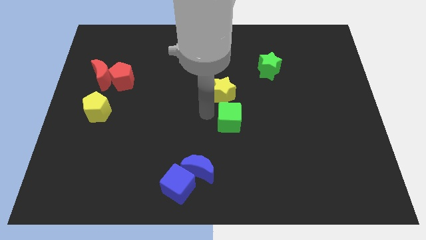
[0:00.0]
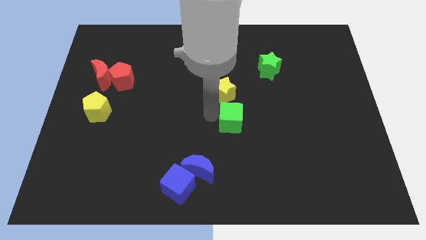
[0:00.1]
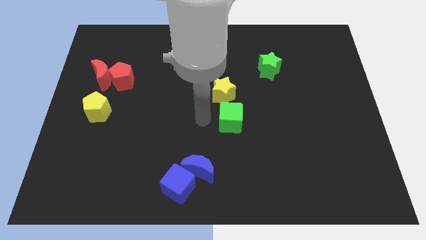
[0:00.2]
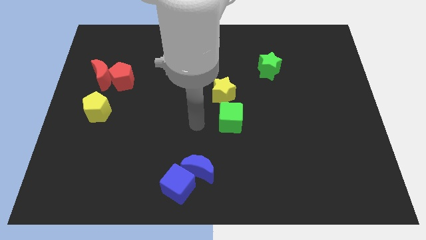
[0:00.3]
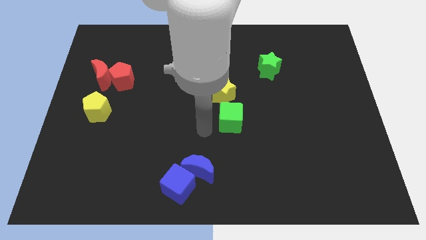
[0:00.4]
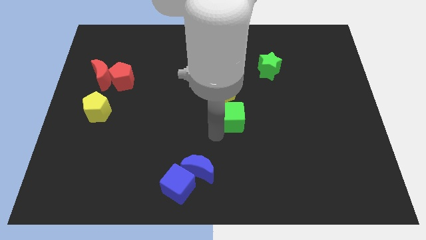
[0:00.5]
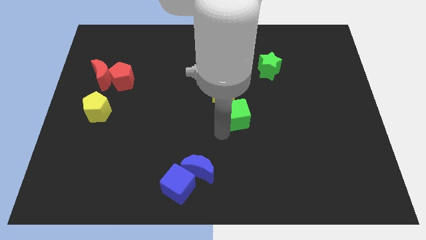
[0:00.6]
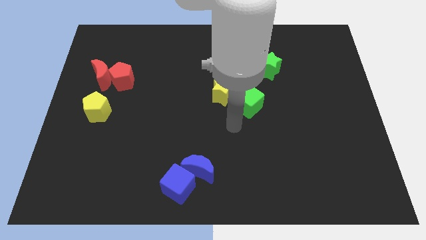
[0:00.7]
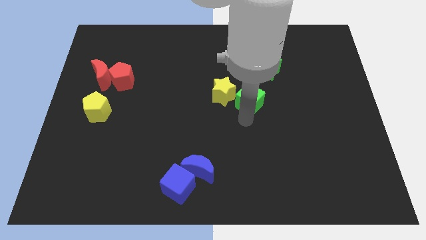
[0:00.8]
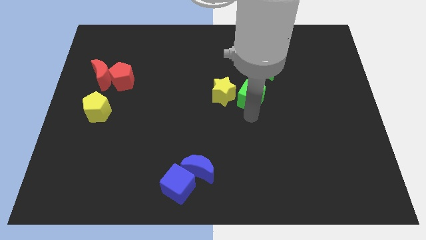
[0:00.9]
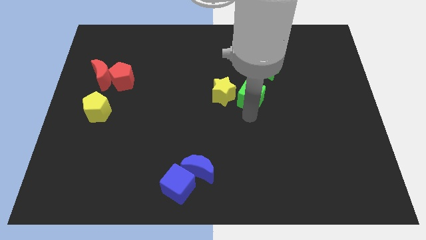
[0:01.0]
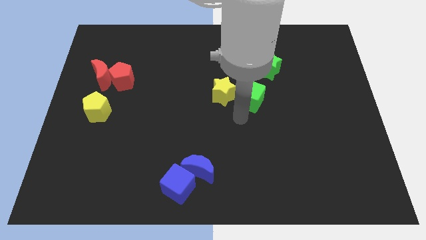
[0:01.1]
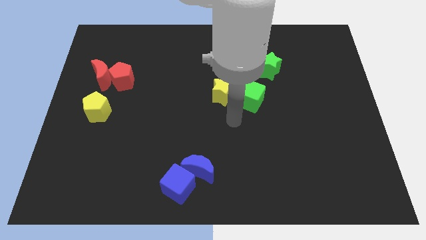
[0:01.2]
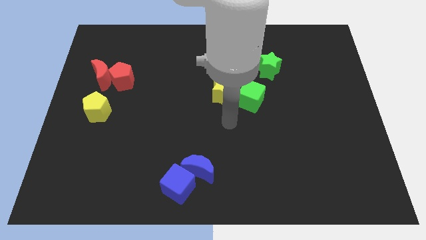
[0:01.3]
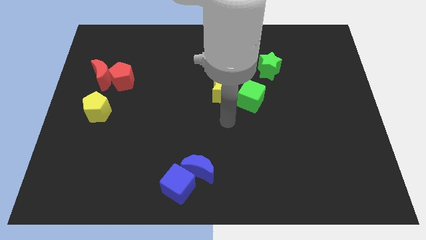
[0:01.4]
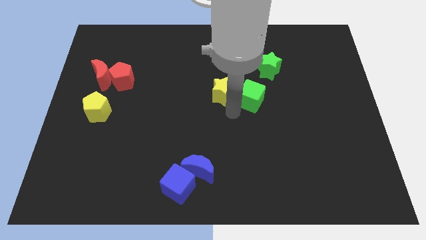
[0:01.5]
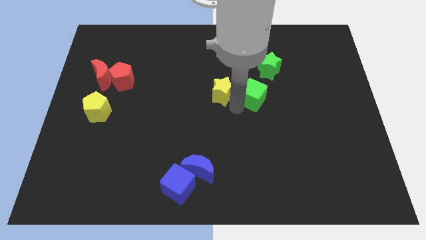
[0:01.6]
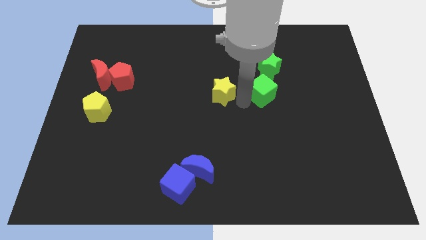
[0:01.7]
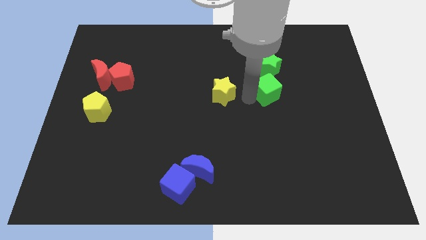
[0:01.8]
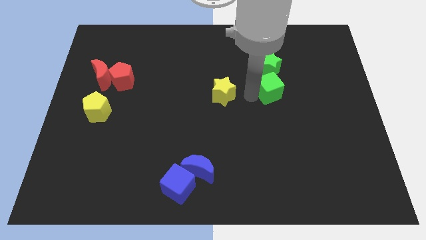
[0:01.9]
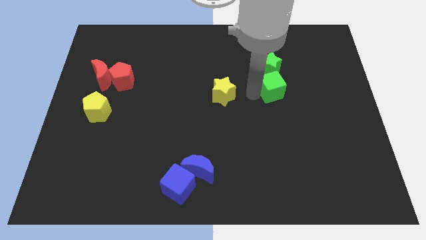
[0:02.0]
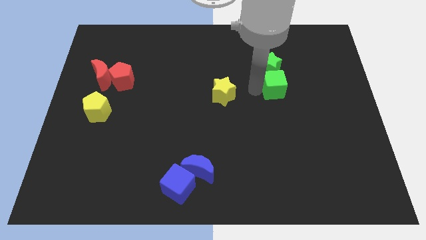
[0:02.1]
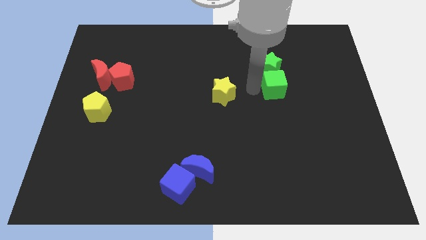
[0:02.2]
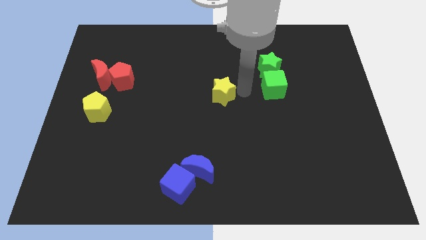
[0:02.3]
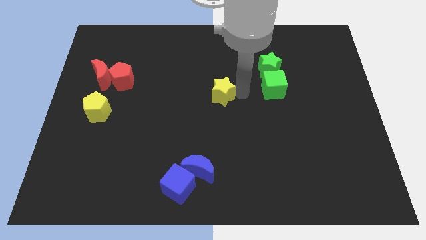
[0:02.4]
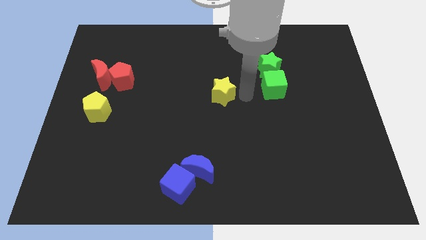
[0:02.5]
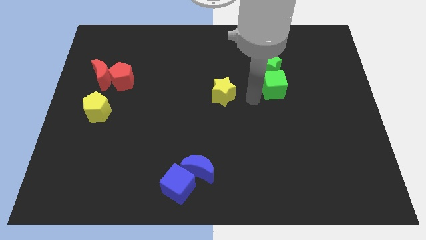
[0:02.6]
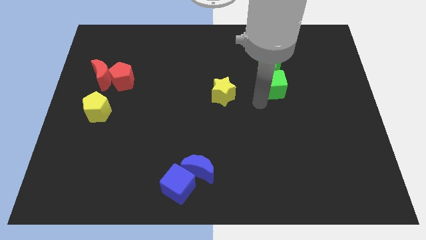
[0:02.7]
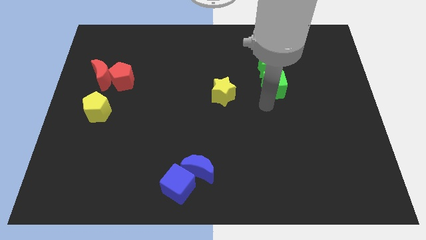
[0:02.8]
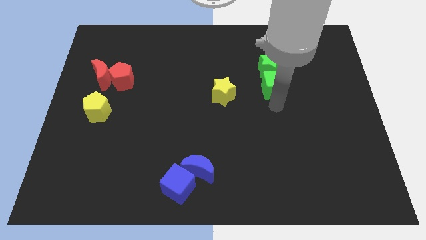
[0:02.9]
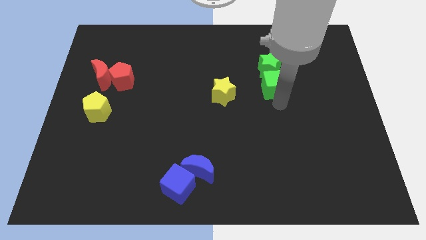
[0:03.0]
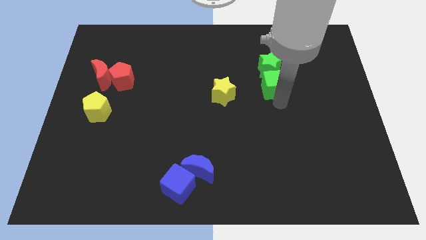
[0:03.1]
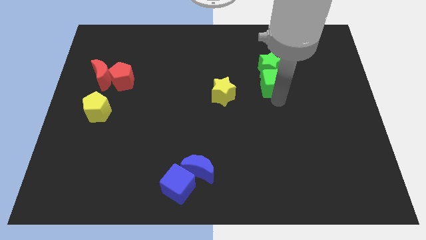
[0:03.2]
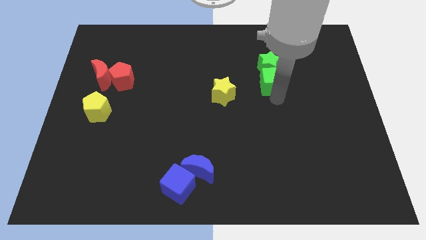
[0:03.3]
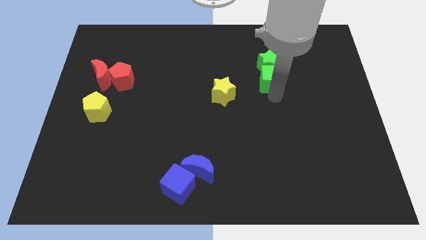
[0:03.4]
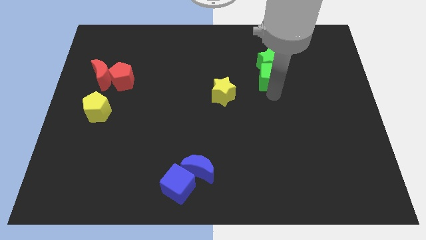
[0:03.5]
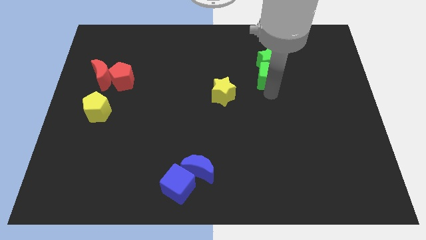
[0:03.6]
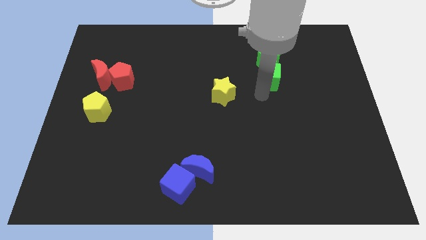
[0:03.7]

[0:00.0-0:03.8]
push the green cube into the green star

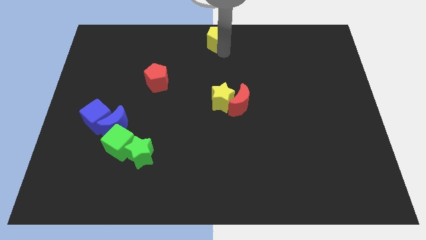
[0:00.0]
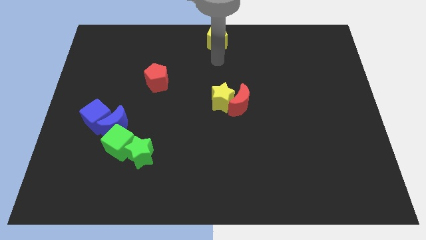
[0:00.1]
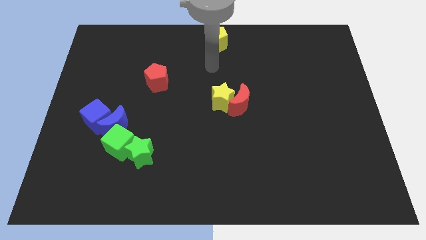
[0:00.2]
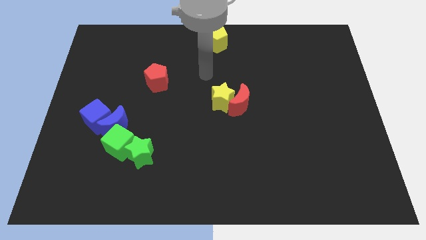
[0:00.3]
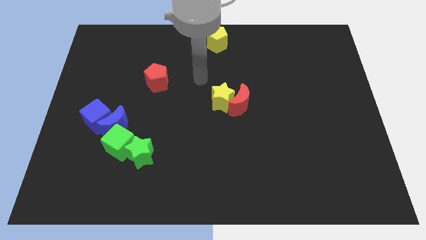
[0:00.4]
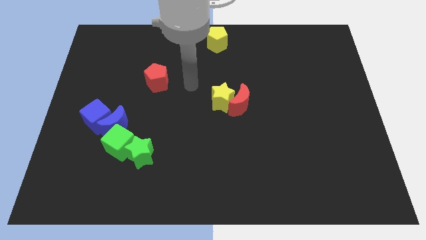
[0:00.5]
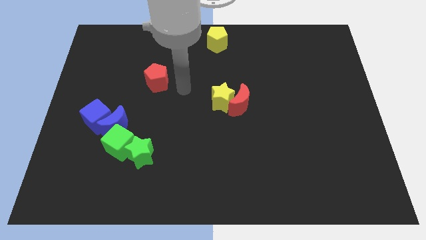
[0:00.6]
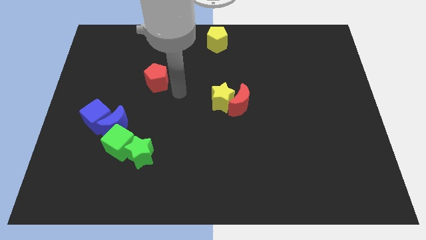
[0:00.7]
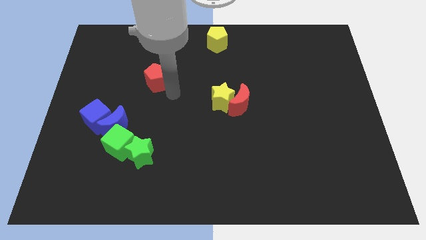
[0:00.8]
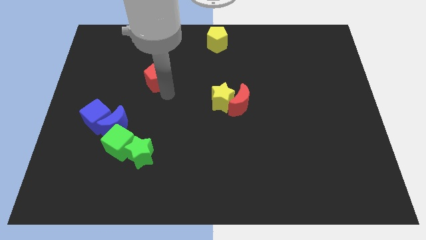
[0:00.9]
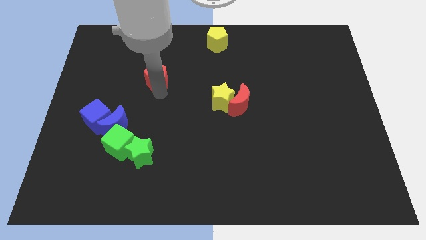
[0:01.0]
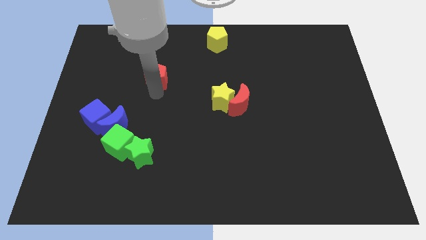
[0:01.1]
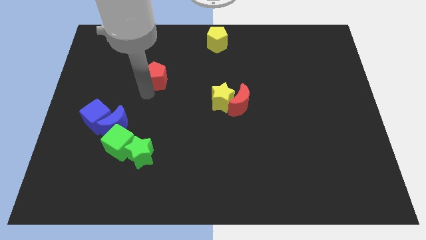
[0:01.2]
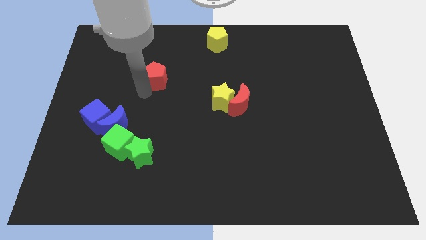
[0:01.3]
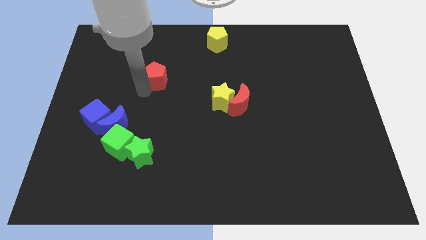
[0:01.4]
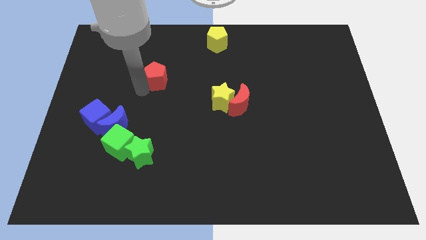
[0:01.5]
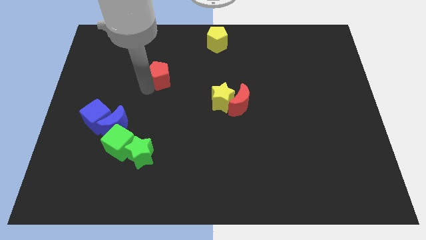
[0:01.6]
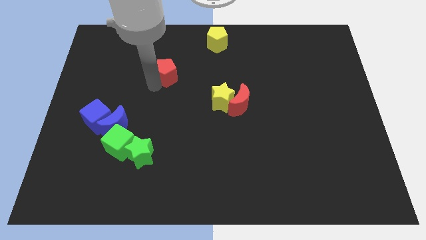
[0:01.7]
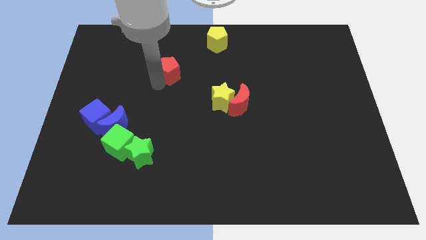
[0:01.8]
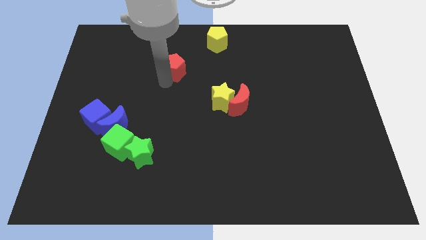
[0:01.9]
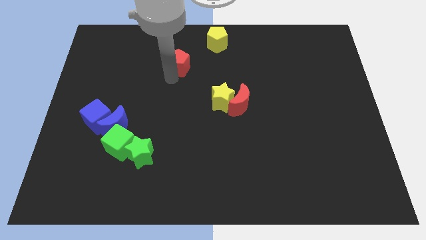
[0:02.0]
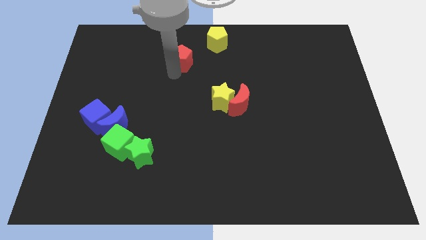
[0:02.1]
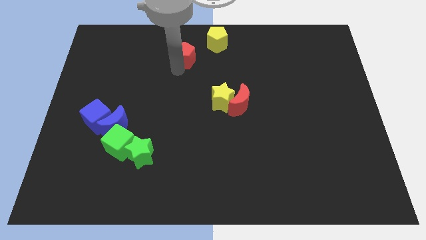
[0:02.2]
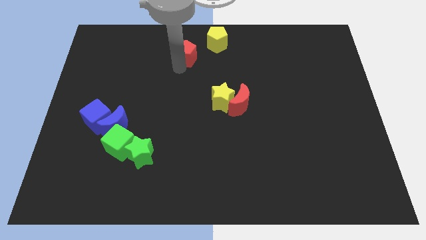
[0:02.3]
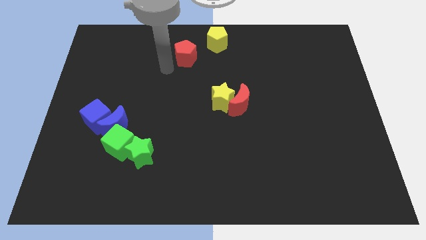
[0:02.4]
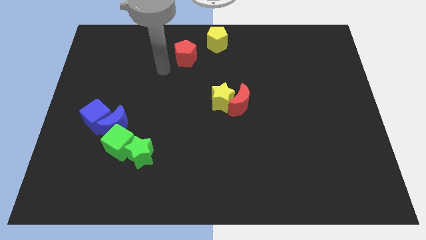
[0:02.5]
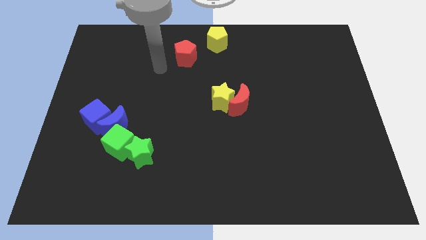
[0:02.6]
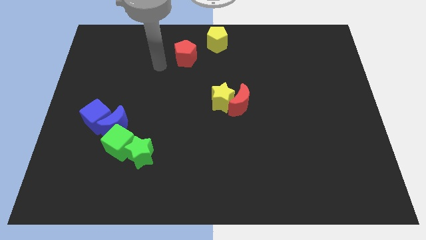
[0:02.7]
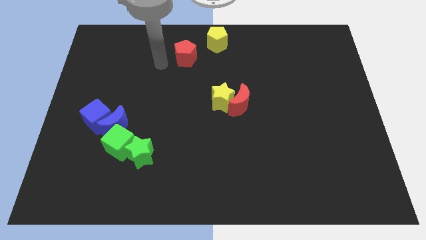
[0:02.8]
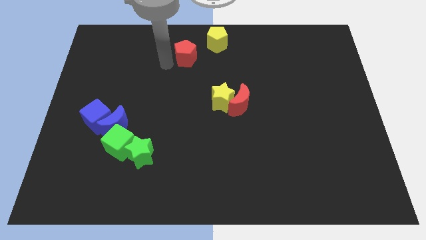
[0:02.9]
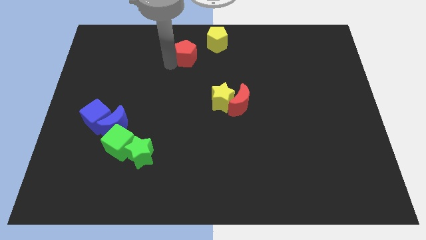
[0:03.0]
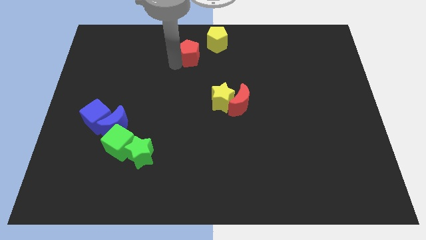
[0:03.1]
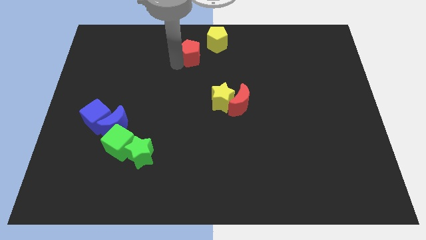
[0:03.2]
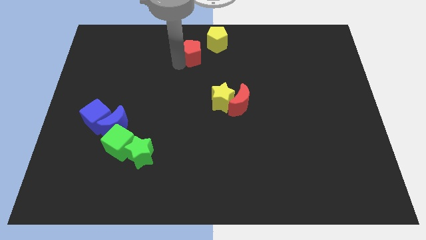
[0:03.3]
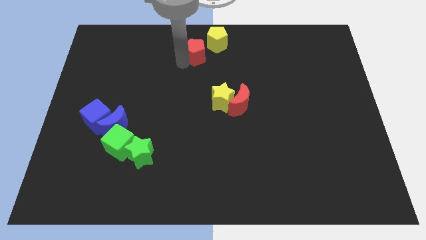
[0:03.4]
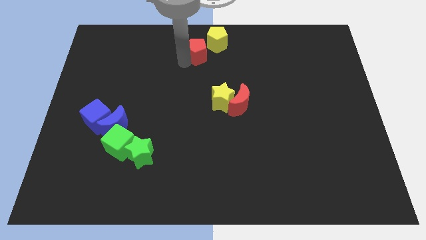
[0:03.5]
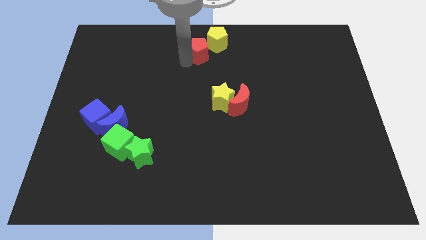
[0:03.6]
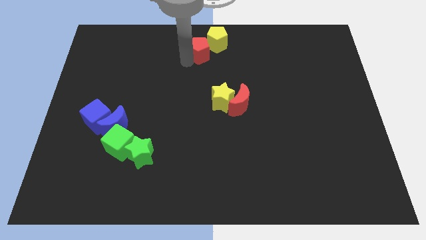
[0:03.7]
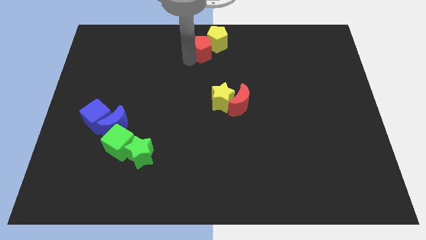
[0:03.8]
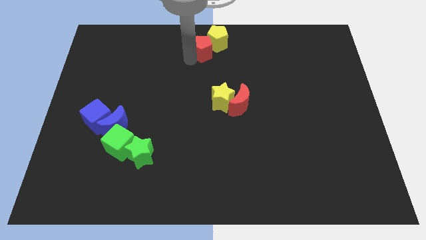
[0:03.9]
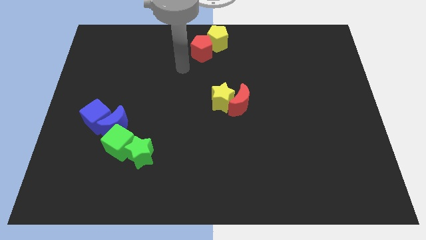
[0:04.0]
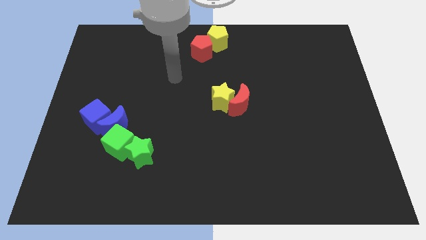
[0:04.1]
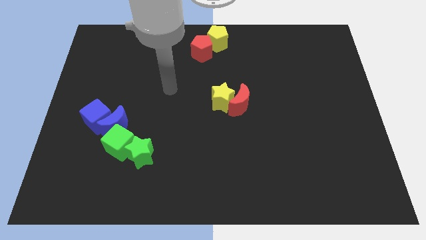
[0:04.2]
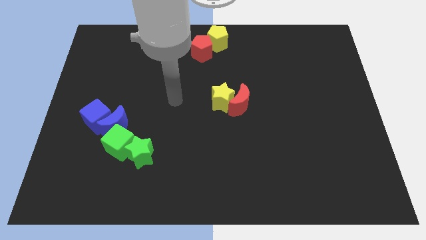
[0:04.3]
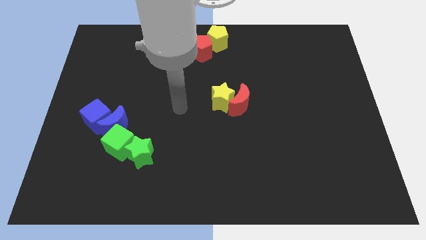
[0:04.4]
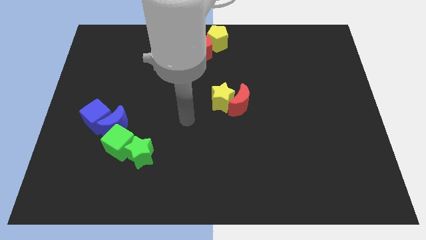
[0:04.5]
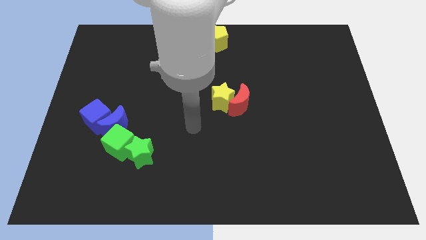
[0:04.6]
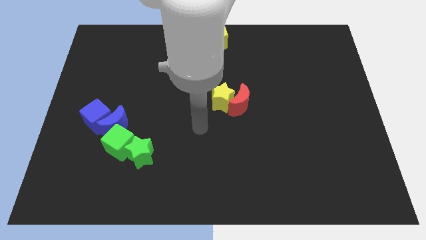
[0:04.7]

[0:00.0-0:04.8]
push the red pentagon near the yellow pentagon

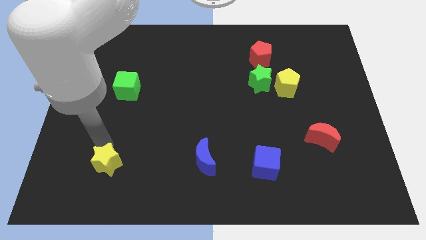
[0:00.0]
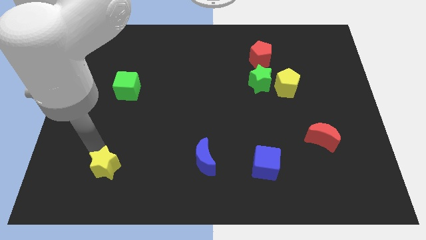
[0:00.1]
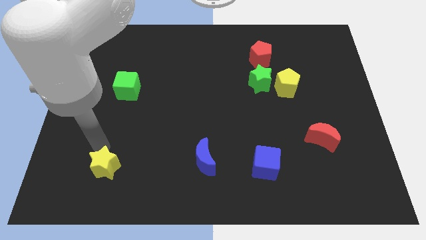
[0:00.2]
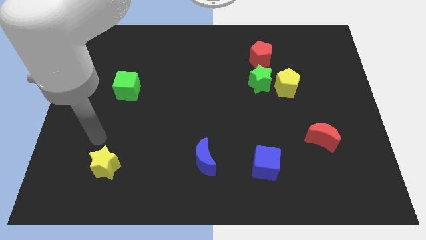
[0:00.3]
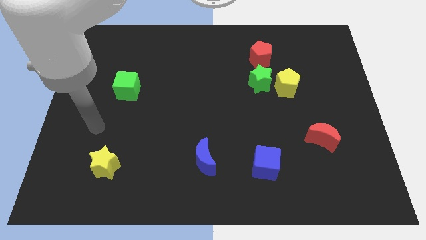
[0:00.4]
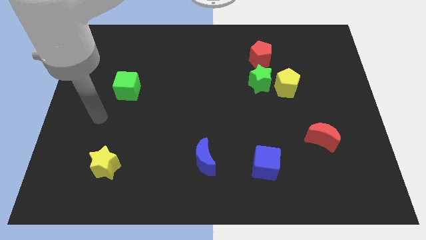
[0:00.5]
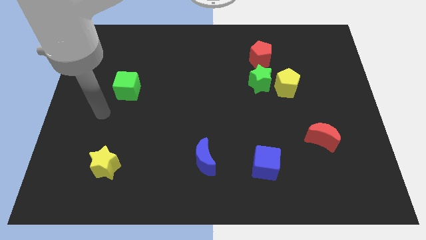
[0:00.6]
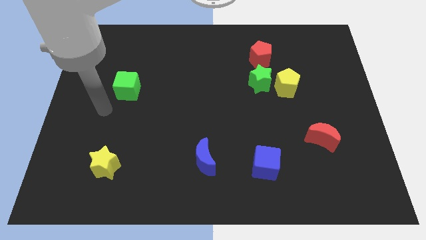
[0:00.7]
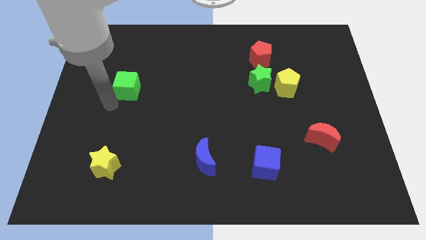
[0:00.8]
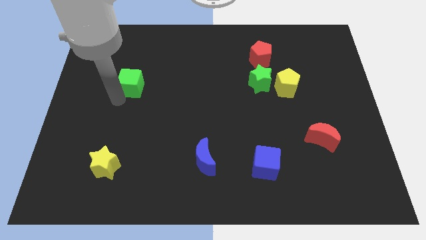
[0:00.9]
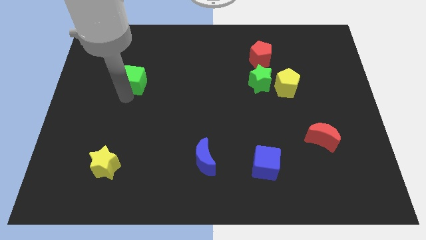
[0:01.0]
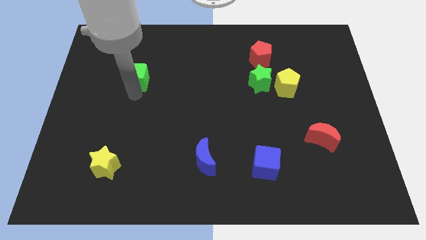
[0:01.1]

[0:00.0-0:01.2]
touch the bottom of green cube
